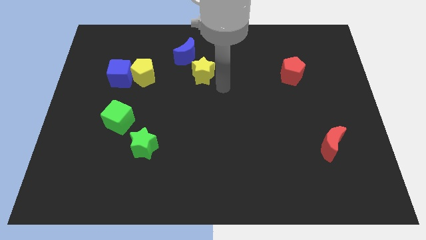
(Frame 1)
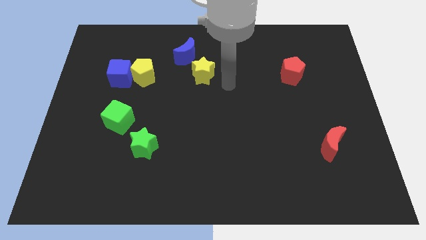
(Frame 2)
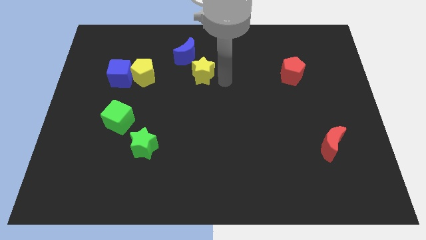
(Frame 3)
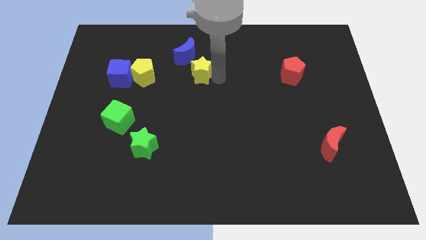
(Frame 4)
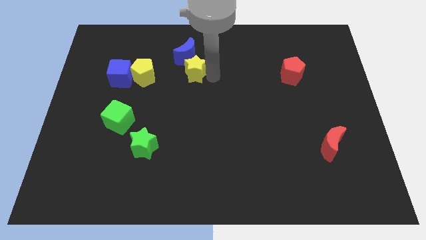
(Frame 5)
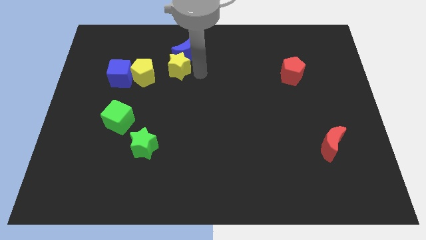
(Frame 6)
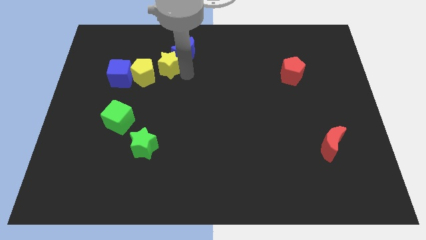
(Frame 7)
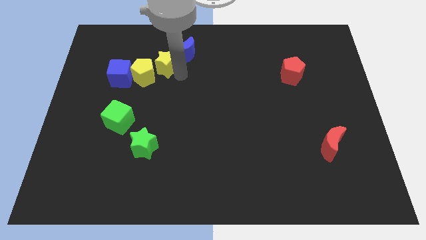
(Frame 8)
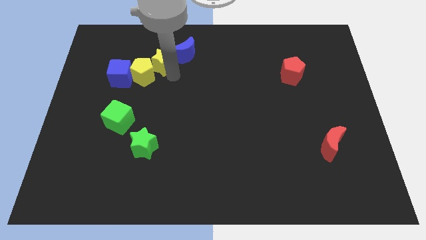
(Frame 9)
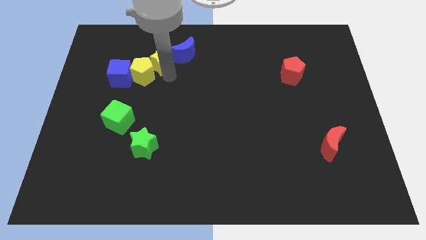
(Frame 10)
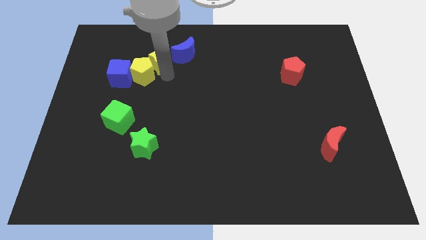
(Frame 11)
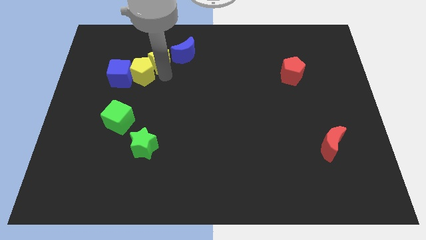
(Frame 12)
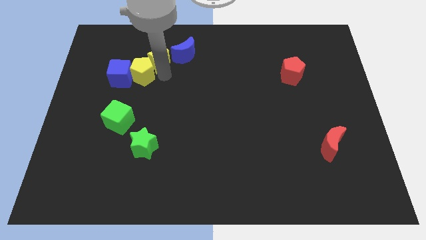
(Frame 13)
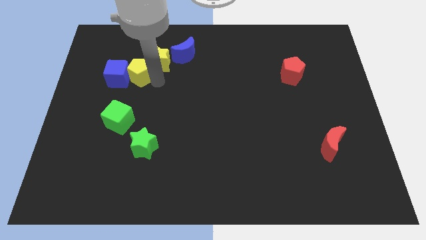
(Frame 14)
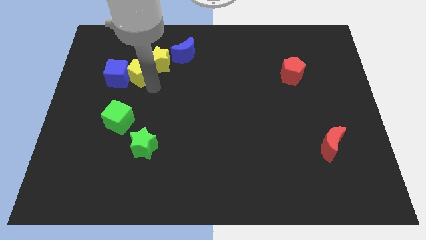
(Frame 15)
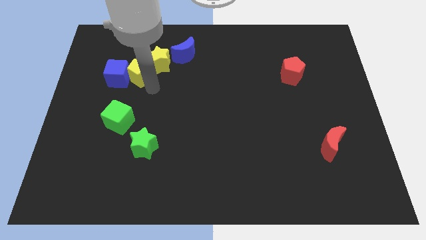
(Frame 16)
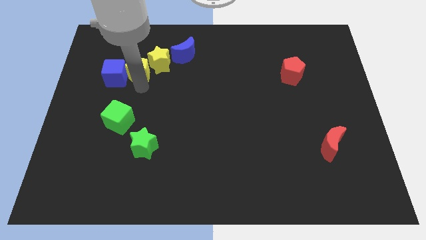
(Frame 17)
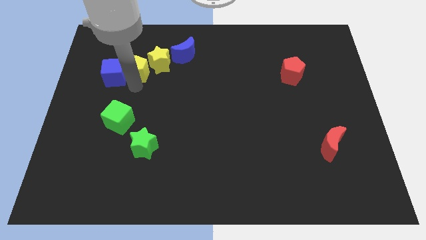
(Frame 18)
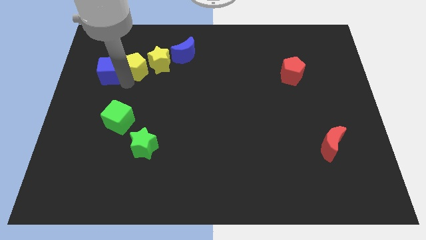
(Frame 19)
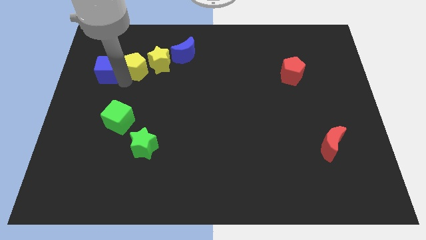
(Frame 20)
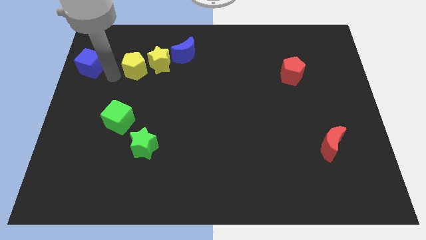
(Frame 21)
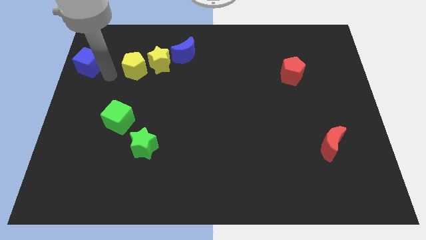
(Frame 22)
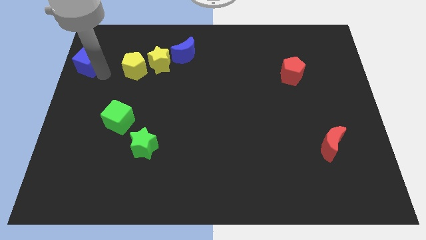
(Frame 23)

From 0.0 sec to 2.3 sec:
move the blue cube towards the top left

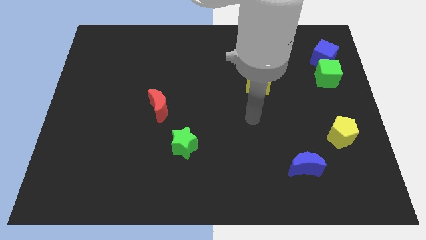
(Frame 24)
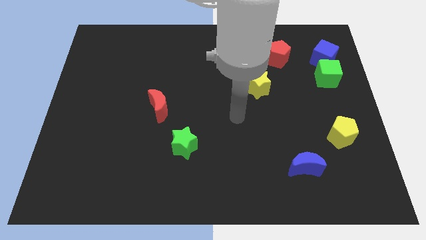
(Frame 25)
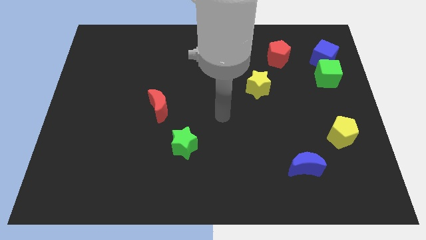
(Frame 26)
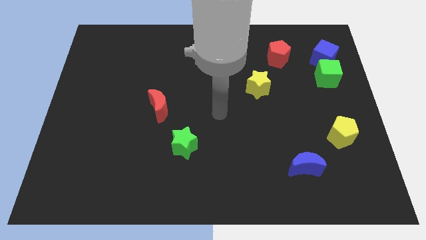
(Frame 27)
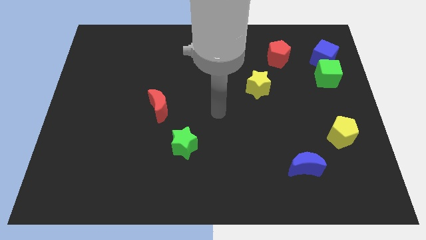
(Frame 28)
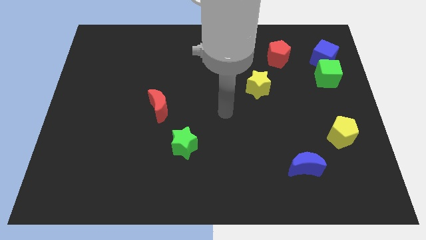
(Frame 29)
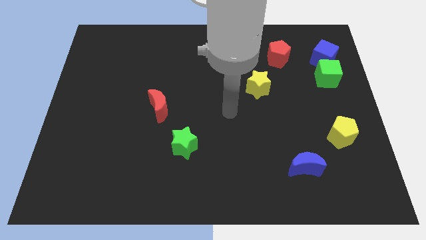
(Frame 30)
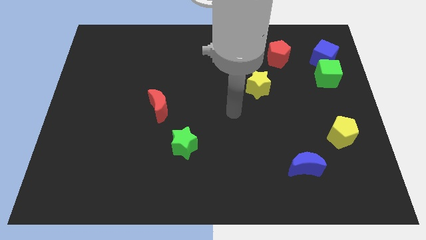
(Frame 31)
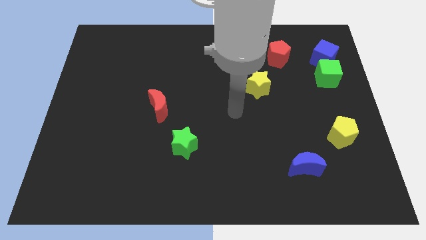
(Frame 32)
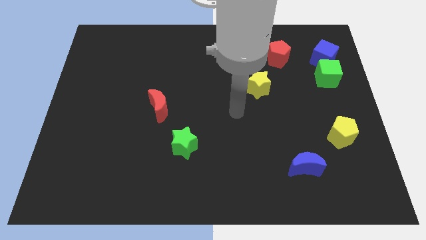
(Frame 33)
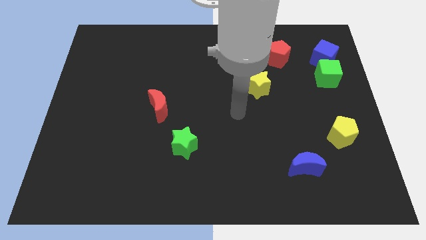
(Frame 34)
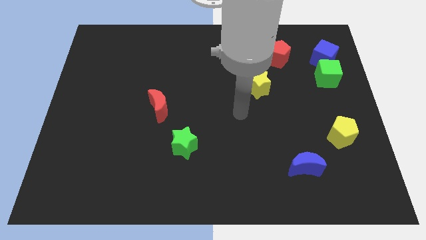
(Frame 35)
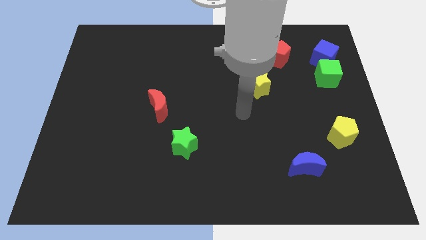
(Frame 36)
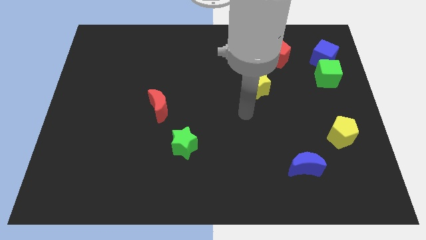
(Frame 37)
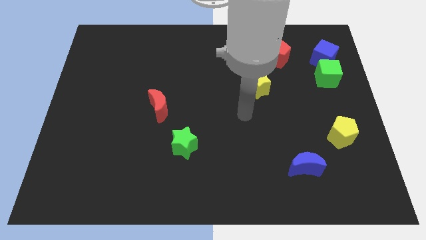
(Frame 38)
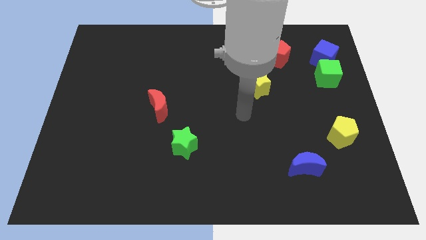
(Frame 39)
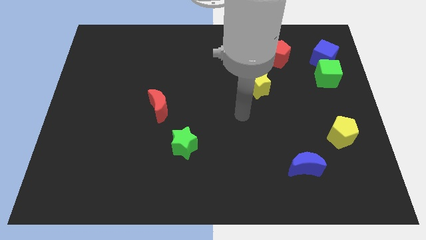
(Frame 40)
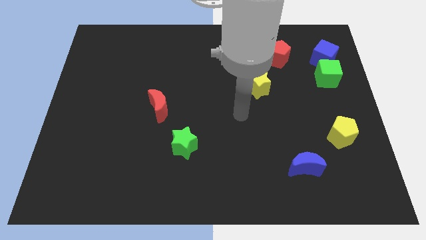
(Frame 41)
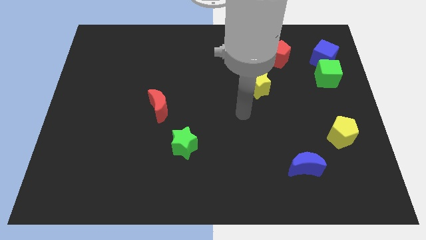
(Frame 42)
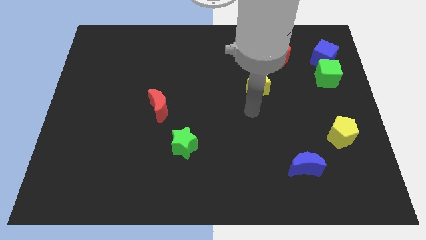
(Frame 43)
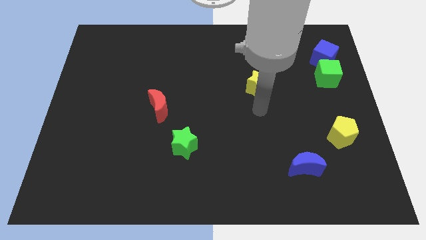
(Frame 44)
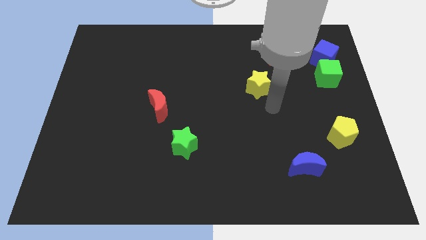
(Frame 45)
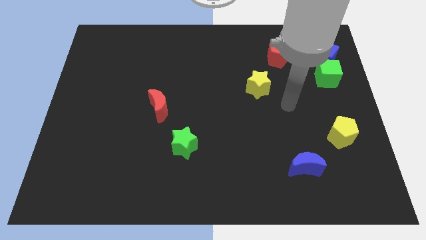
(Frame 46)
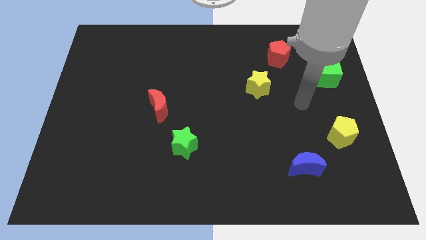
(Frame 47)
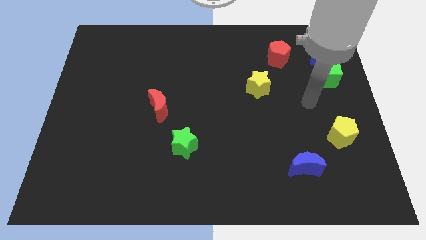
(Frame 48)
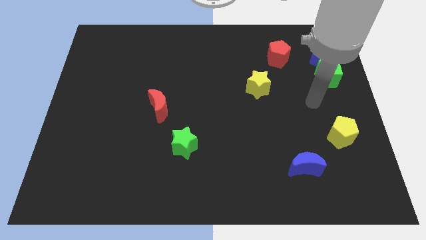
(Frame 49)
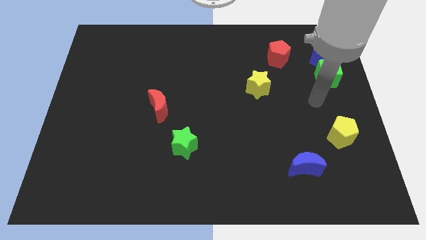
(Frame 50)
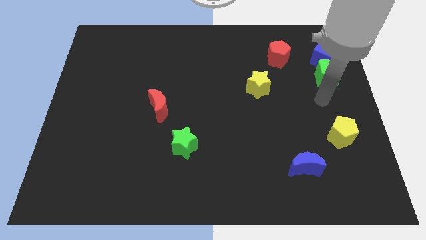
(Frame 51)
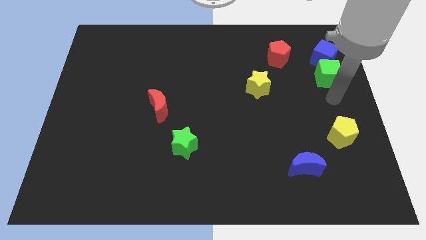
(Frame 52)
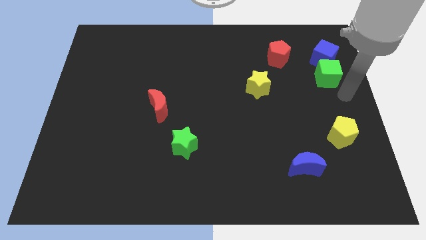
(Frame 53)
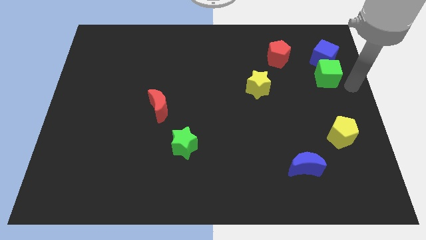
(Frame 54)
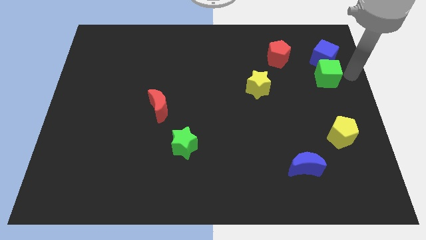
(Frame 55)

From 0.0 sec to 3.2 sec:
put your hand to the right of the green cube

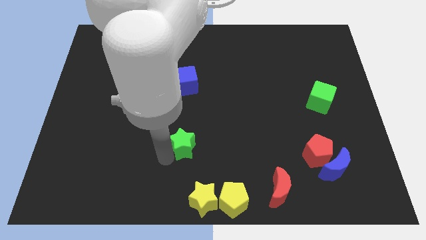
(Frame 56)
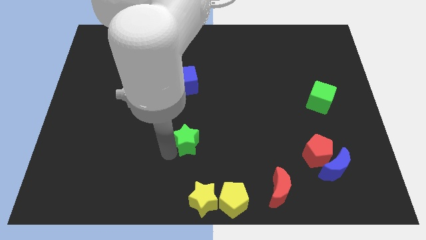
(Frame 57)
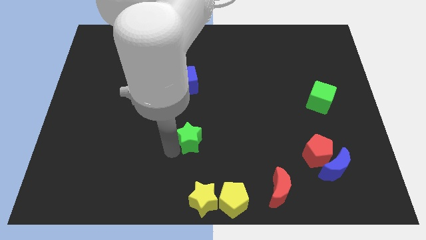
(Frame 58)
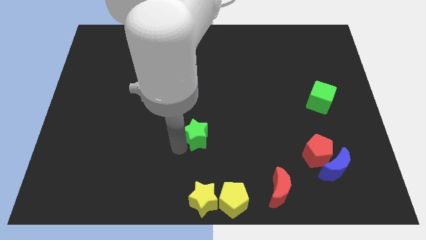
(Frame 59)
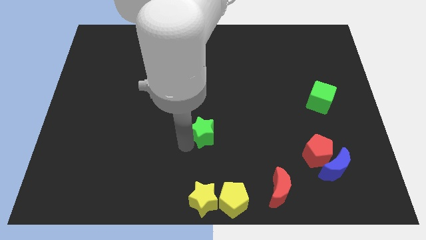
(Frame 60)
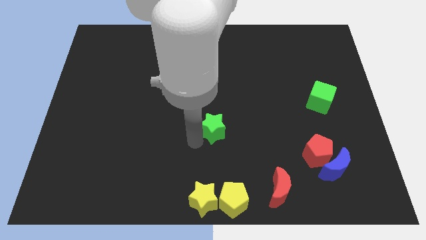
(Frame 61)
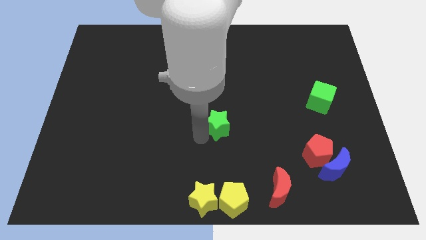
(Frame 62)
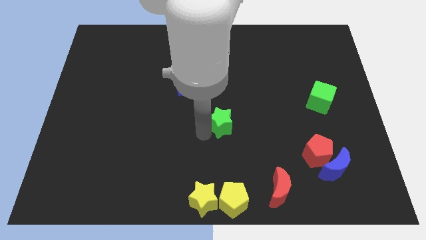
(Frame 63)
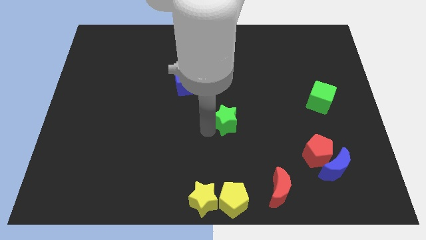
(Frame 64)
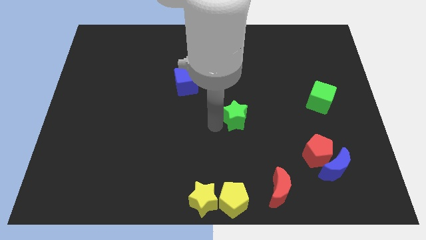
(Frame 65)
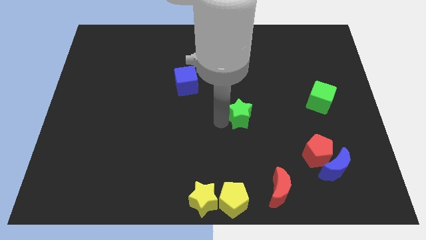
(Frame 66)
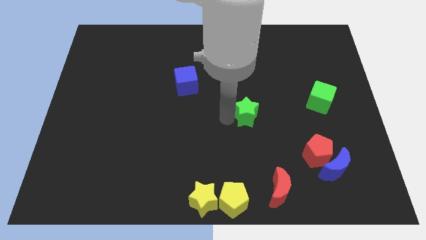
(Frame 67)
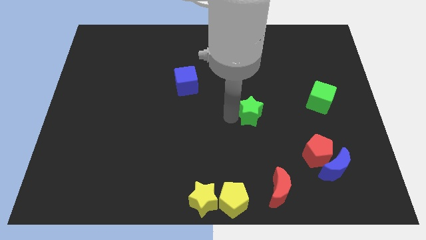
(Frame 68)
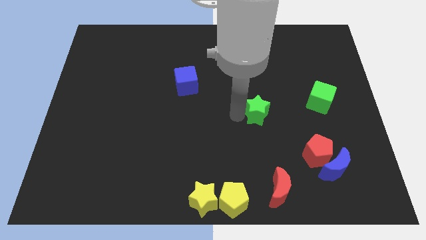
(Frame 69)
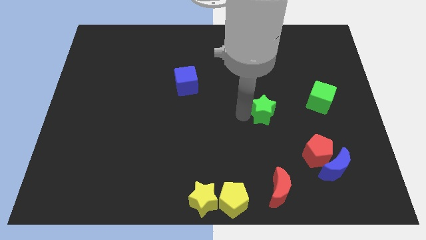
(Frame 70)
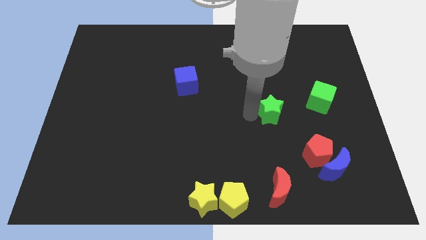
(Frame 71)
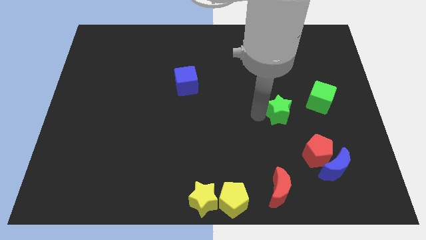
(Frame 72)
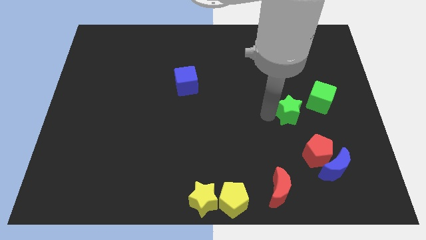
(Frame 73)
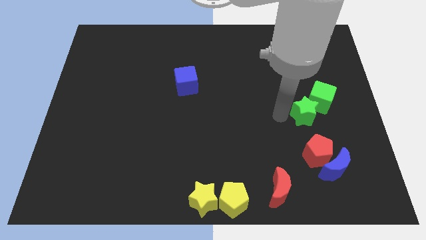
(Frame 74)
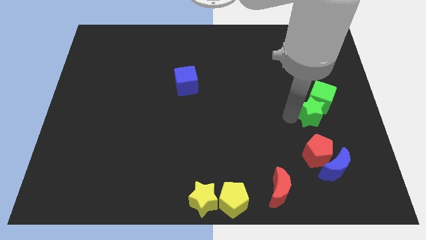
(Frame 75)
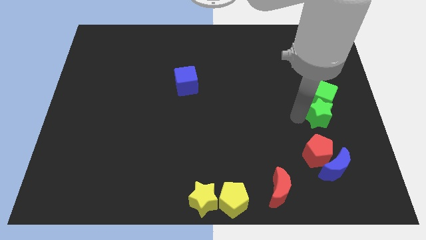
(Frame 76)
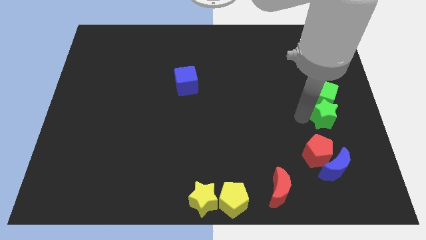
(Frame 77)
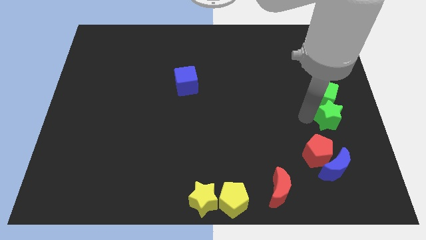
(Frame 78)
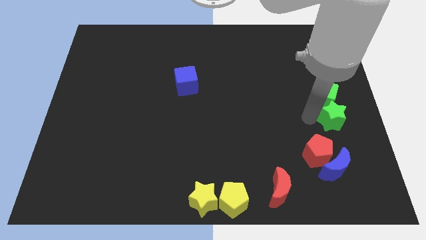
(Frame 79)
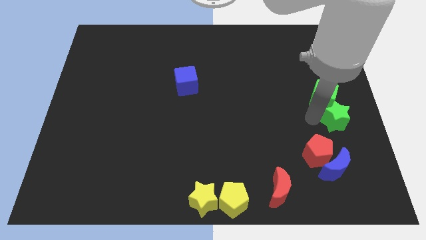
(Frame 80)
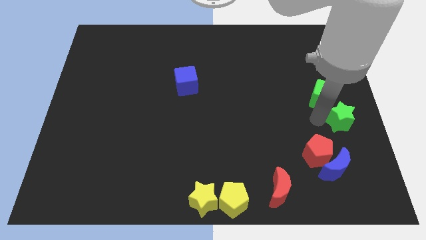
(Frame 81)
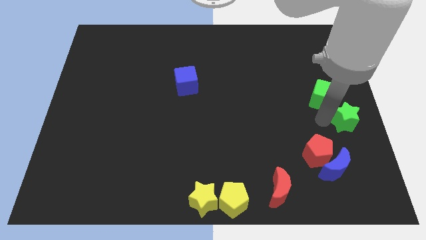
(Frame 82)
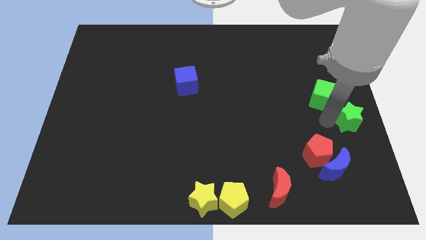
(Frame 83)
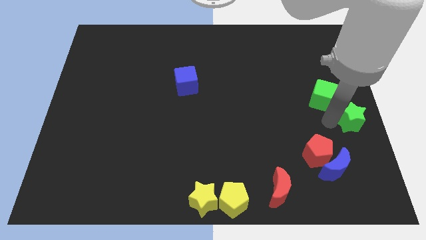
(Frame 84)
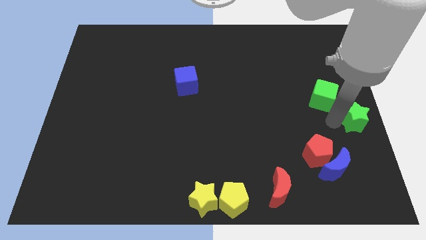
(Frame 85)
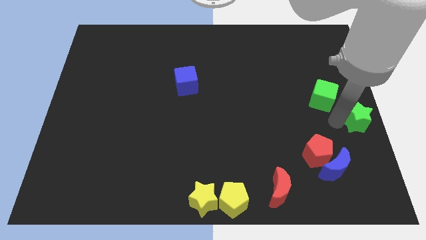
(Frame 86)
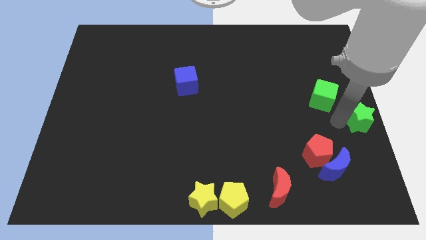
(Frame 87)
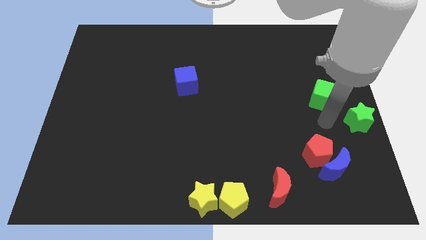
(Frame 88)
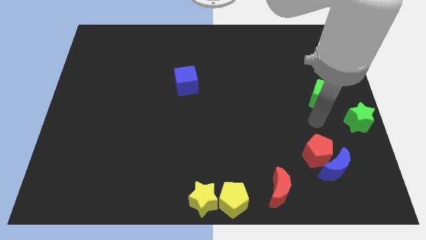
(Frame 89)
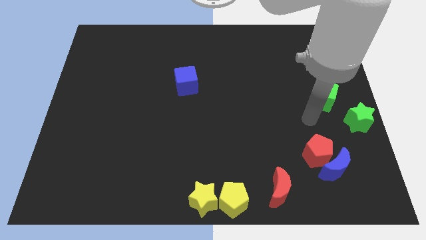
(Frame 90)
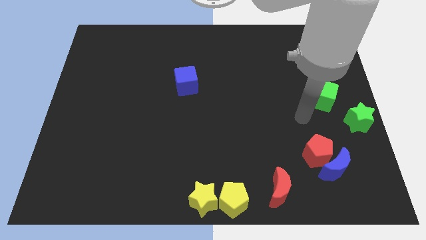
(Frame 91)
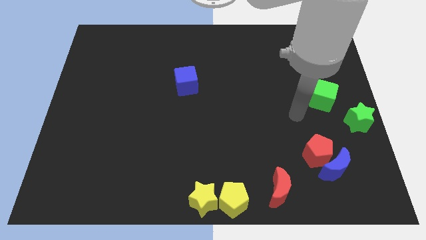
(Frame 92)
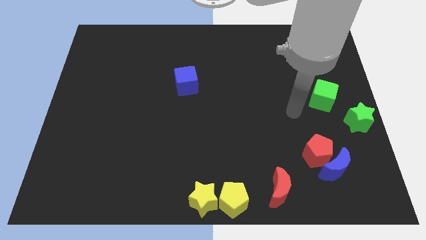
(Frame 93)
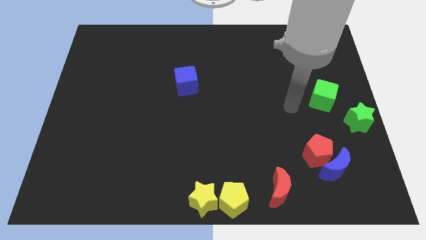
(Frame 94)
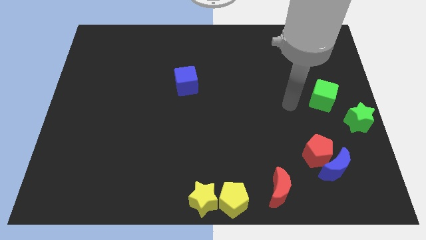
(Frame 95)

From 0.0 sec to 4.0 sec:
move the green star to the center right side of the board
